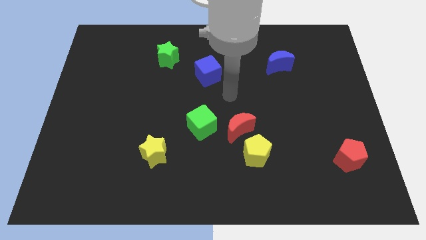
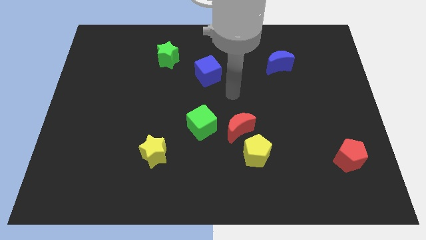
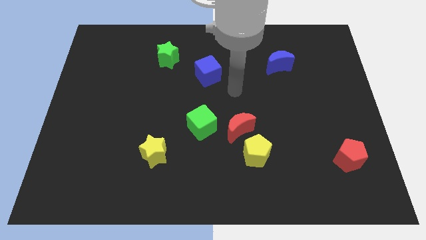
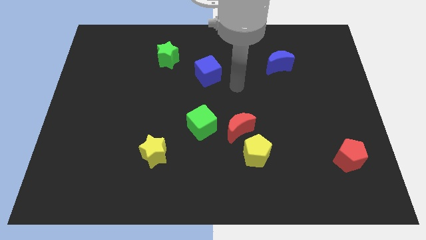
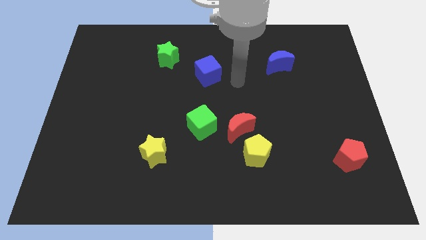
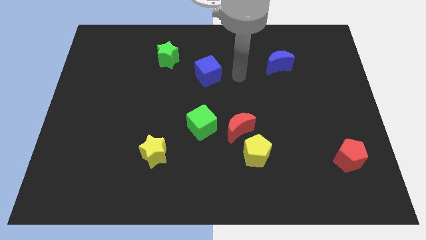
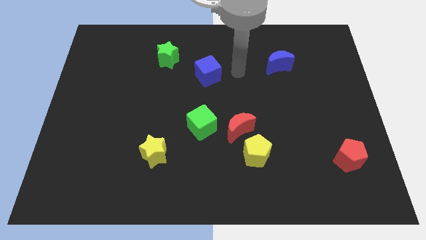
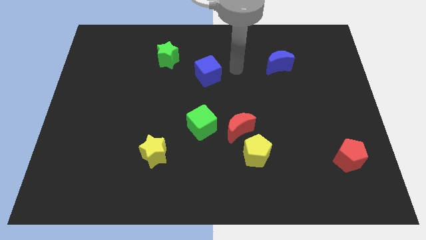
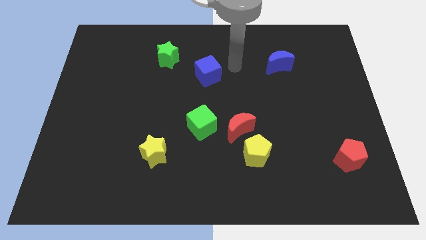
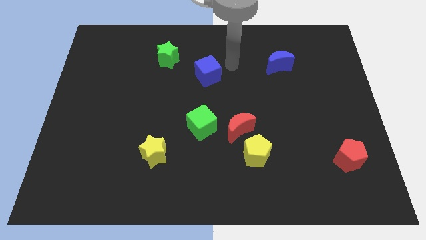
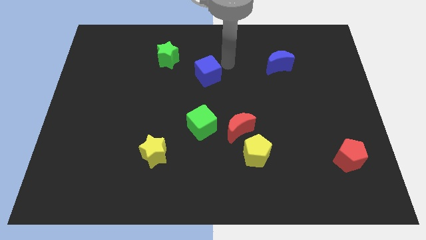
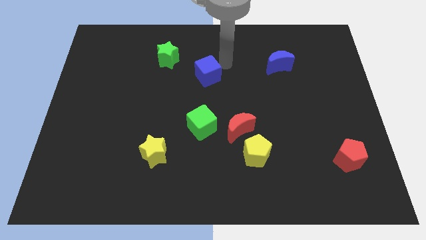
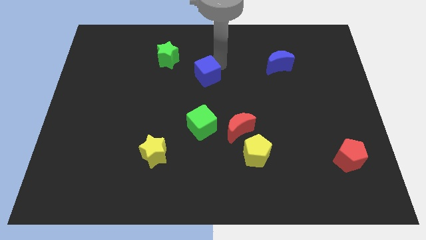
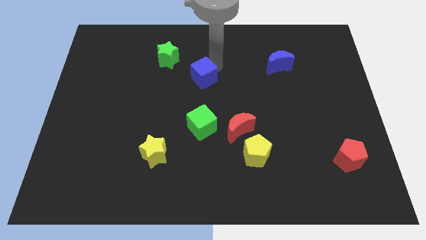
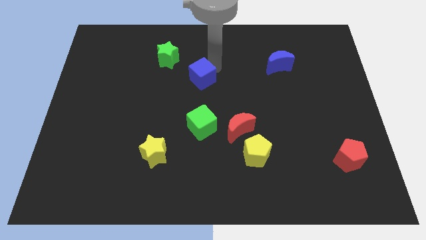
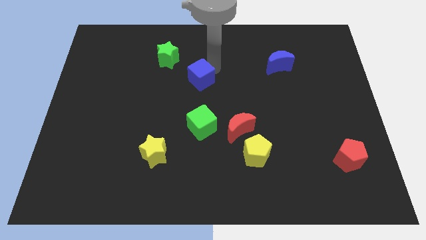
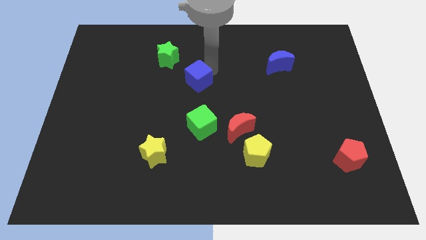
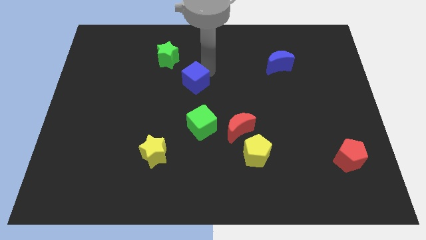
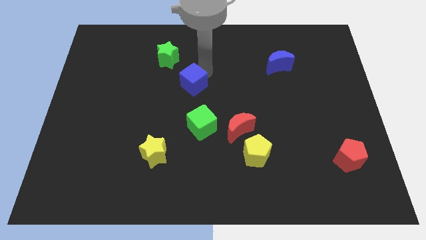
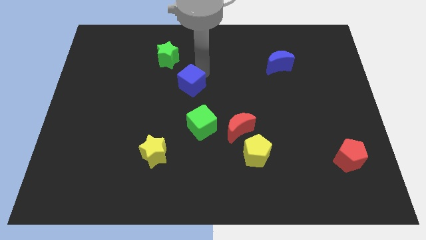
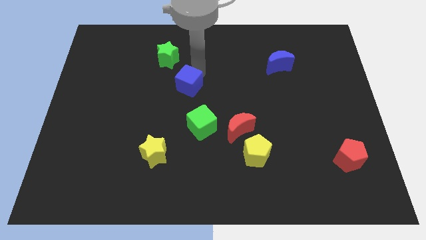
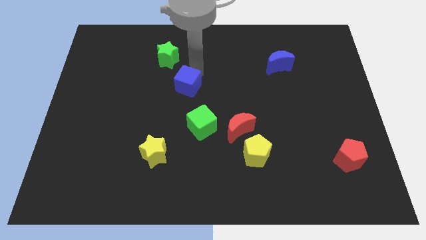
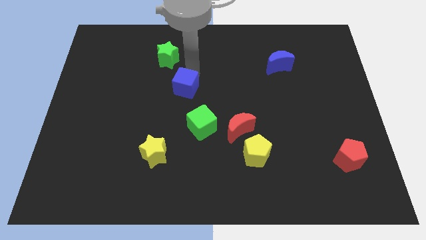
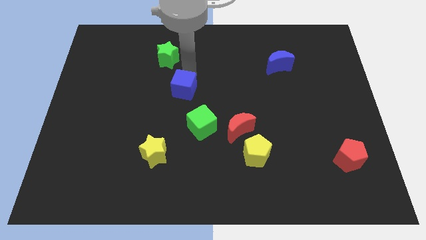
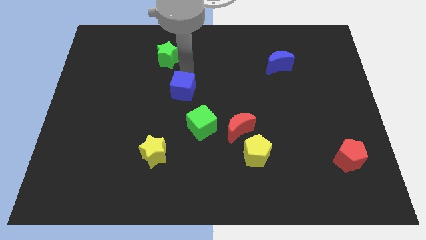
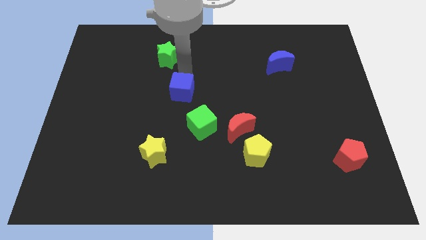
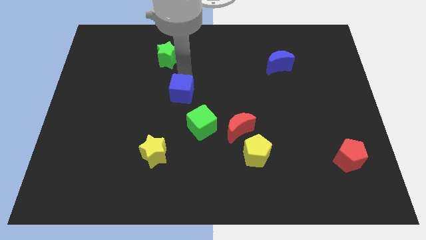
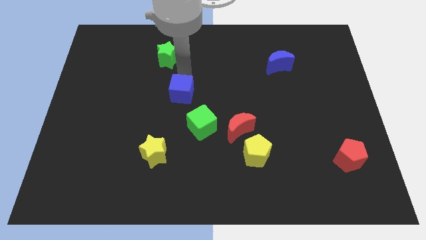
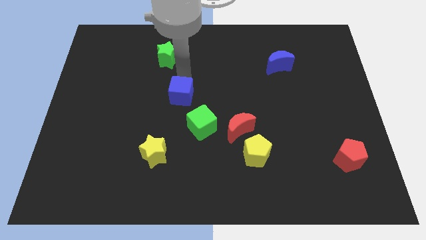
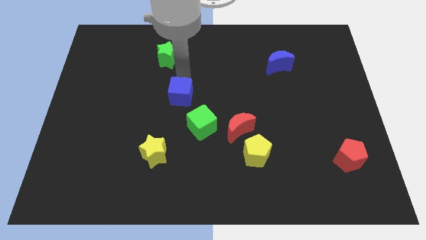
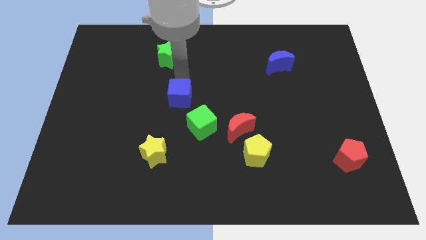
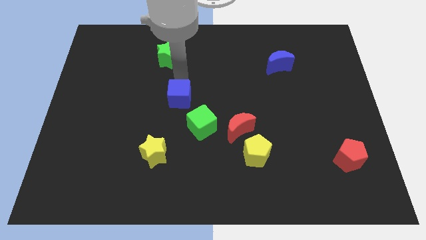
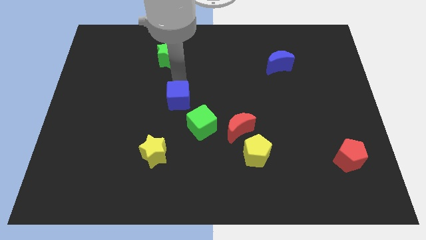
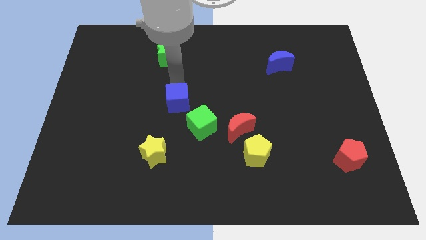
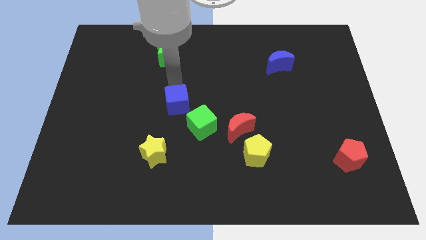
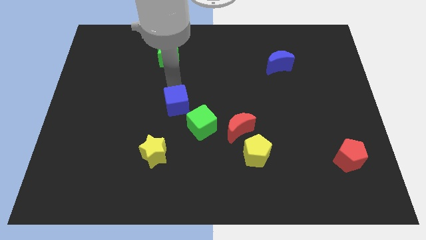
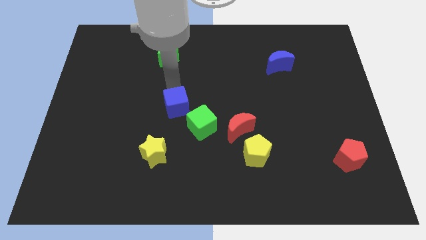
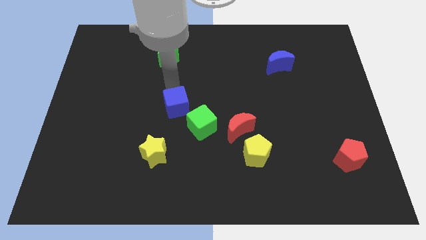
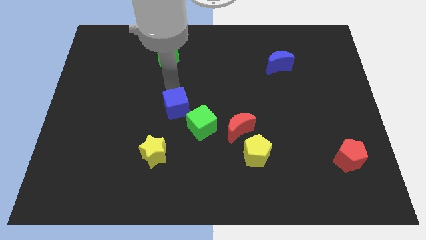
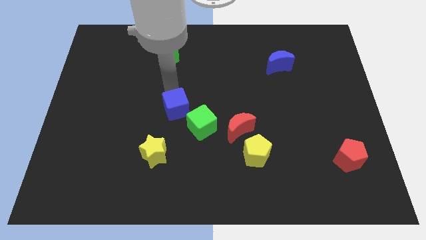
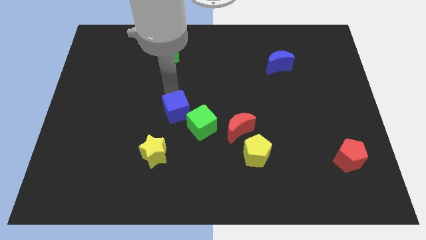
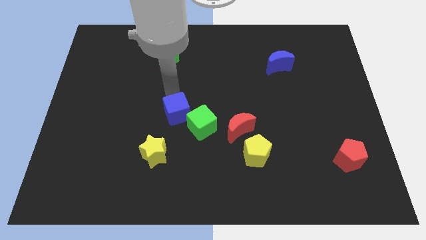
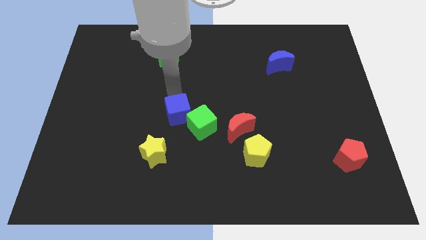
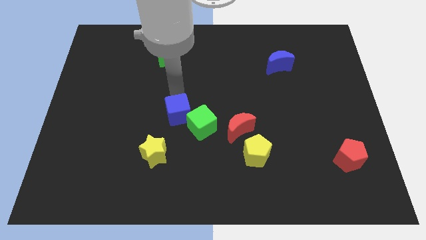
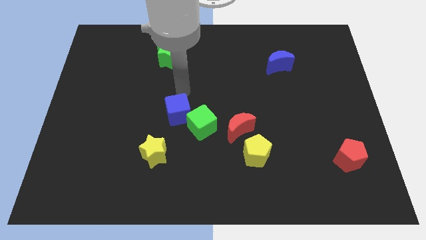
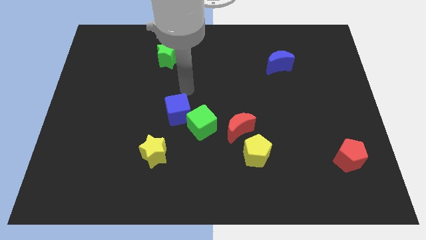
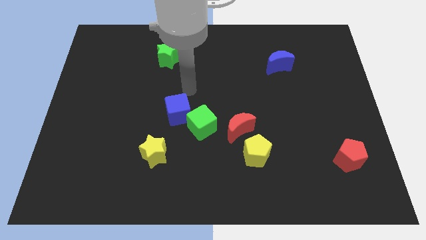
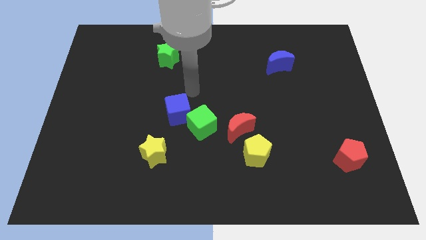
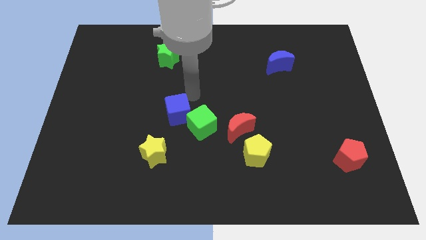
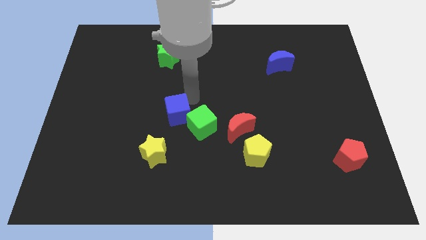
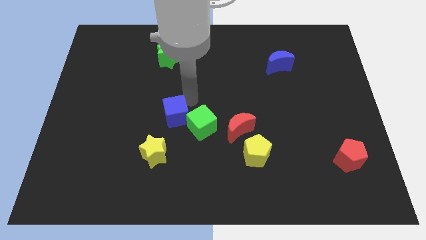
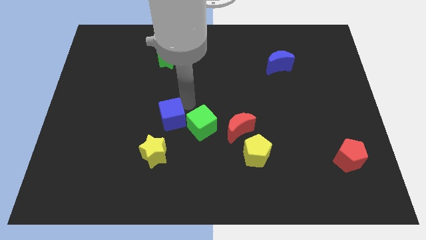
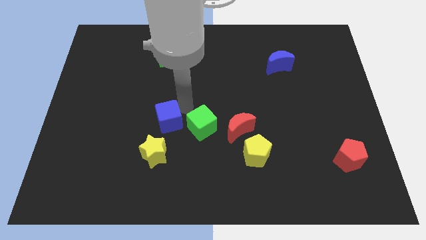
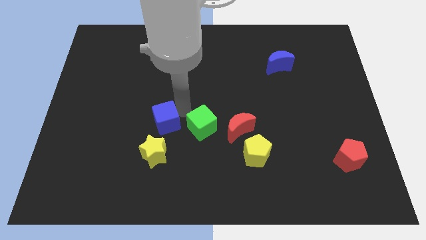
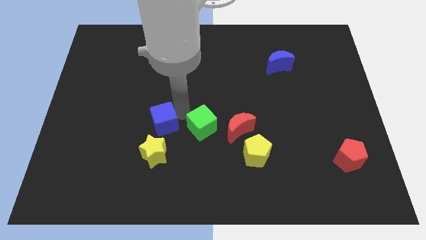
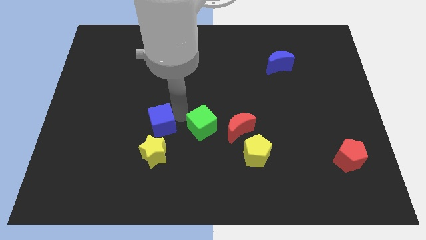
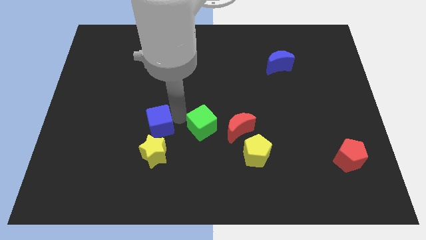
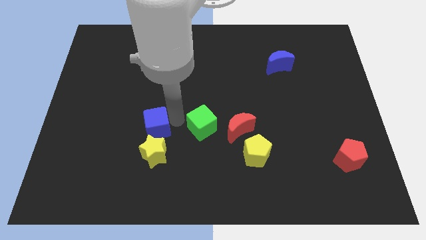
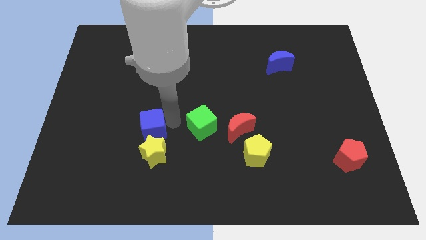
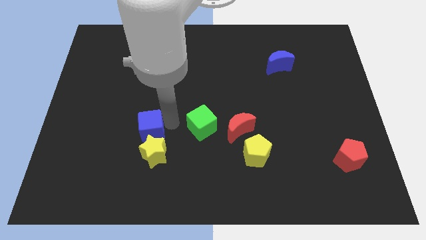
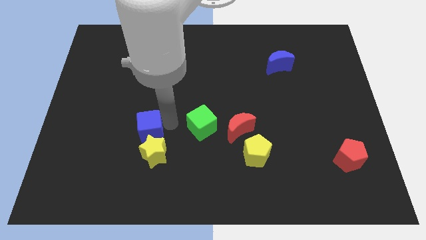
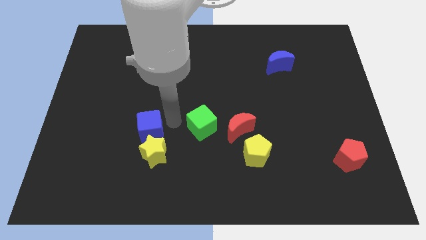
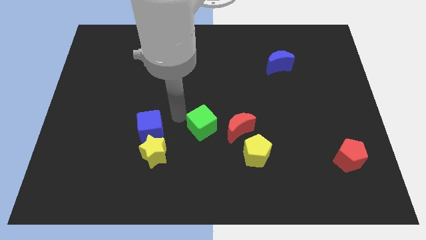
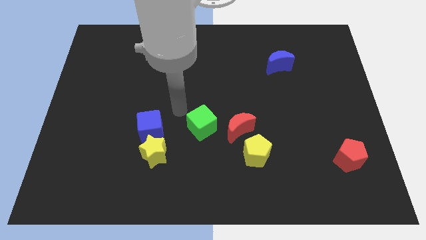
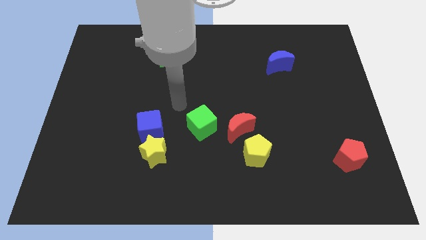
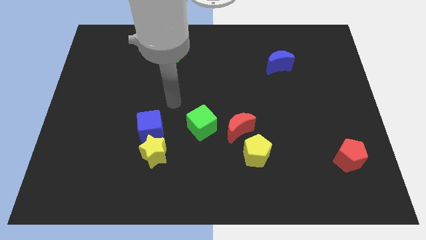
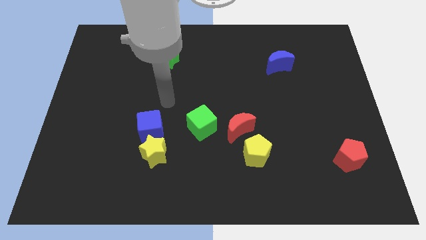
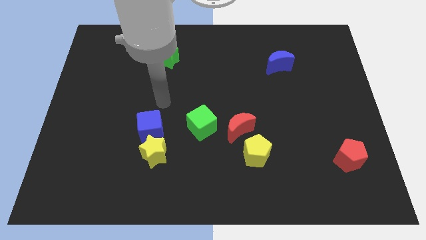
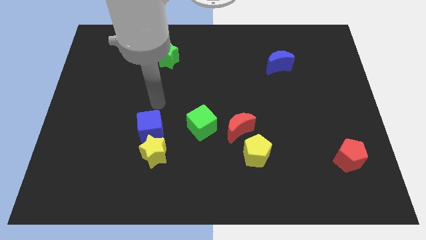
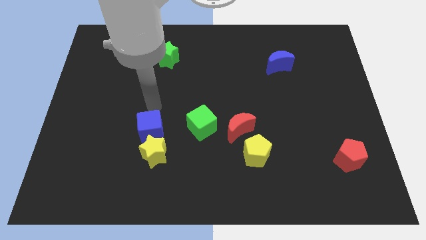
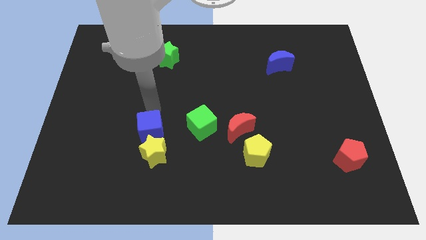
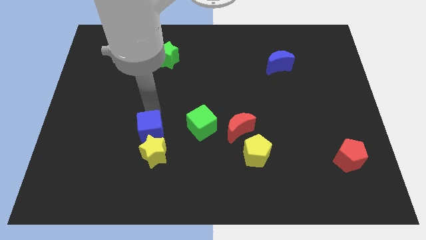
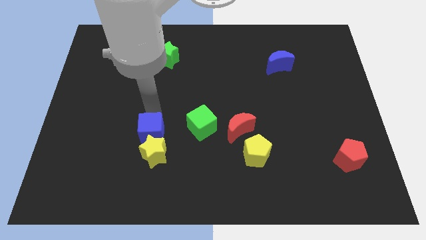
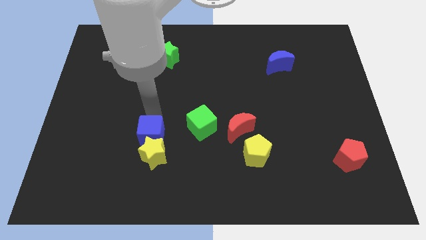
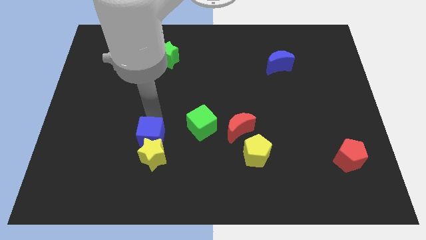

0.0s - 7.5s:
move the blue cube to the yellow star
